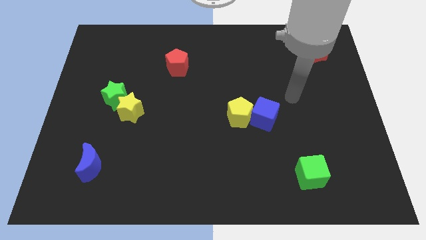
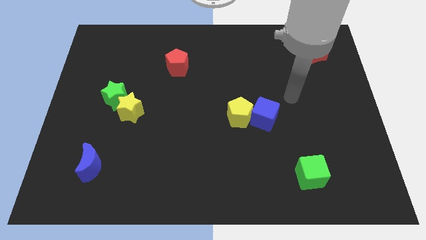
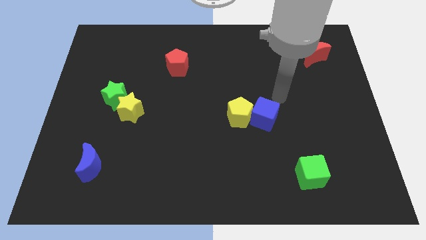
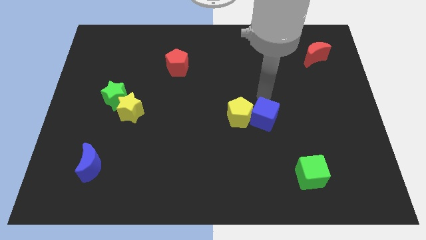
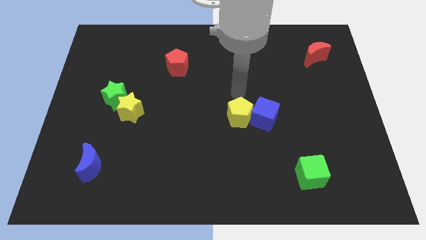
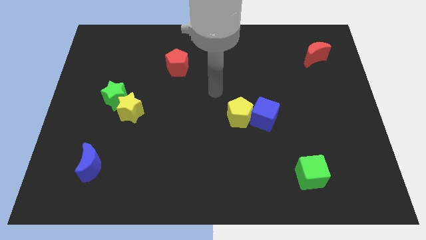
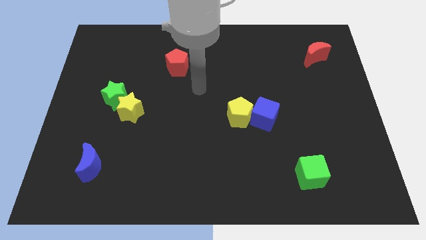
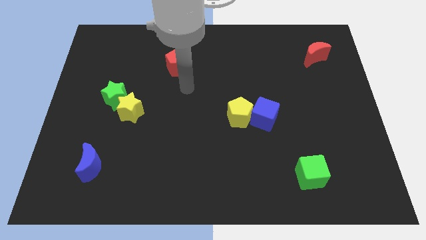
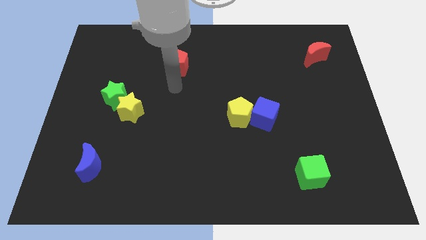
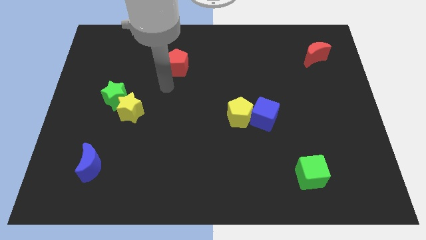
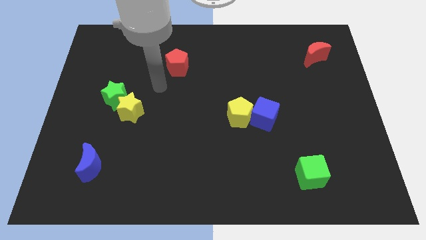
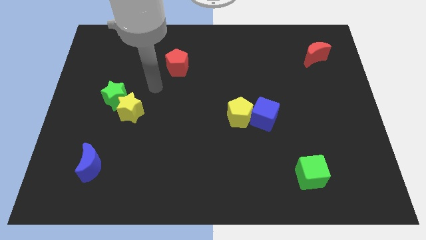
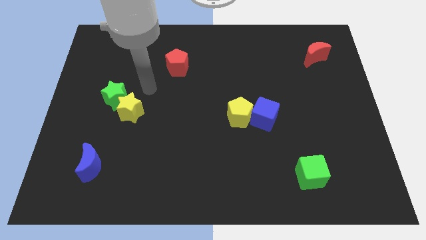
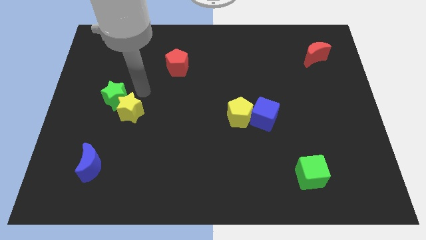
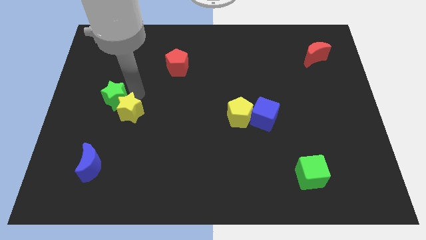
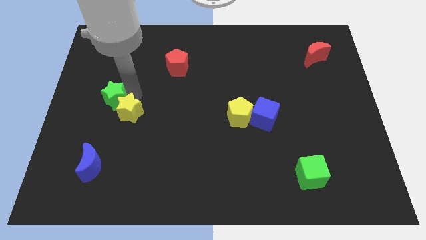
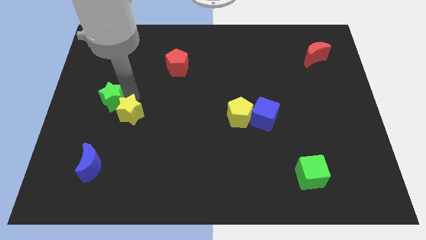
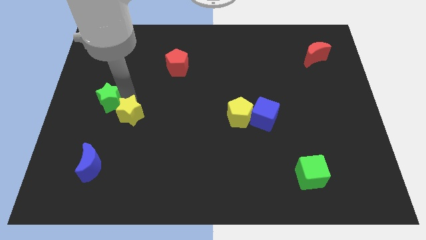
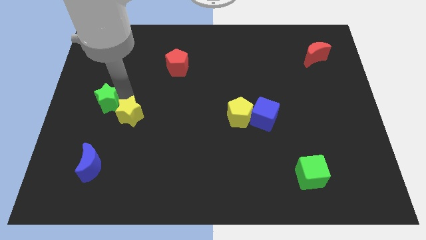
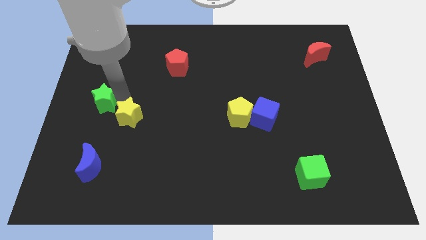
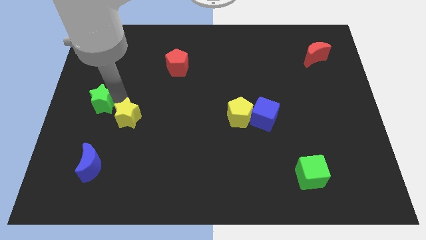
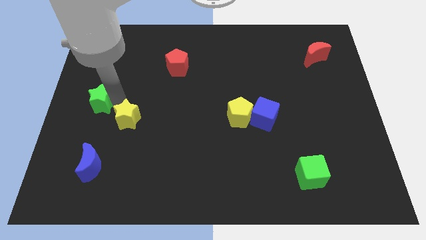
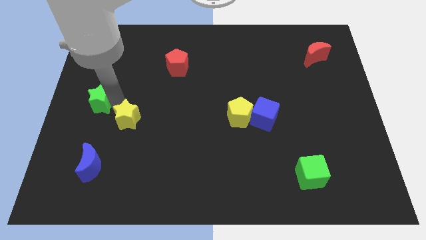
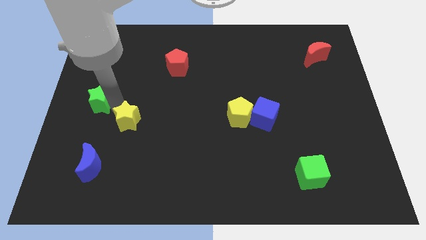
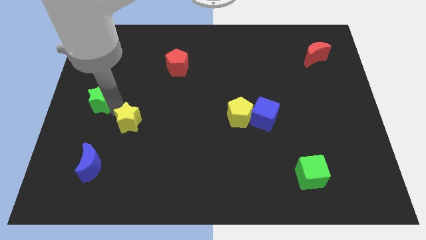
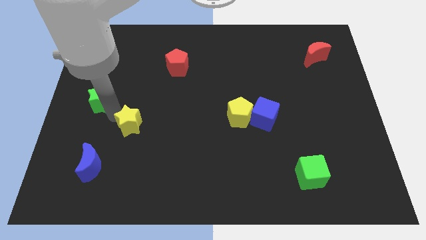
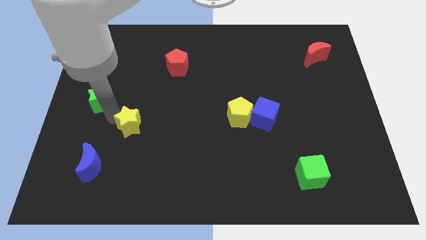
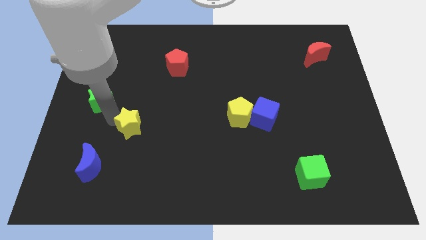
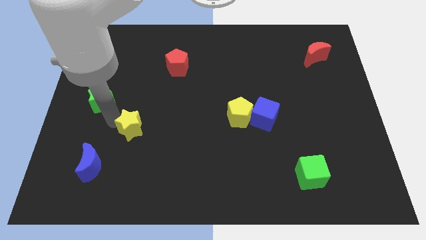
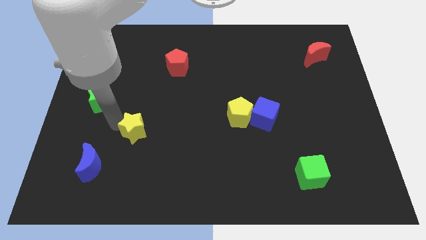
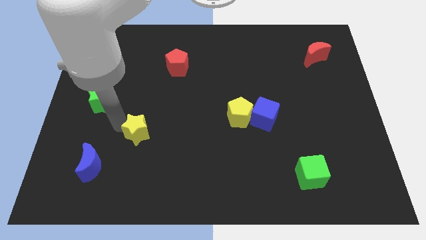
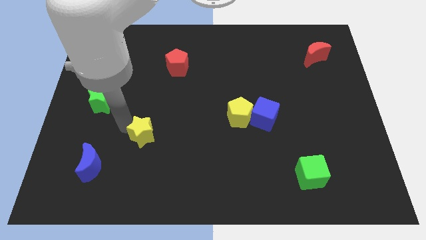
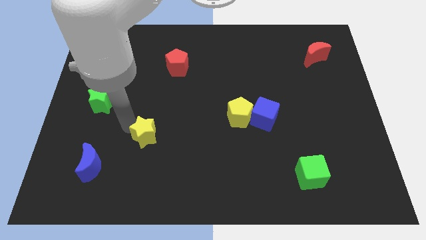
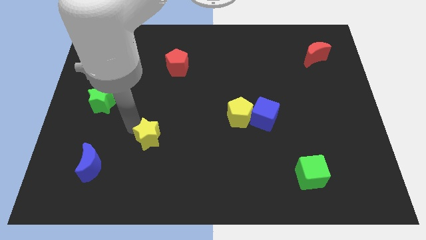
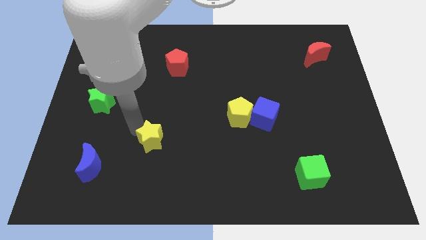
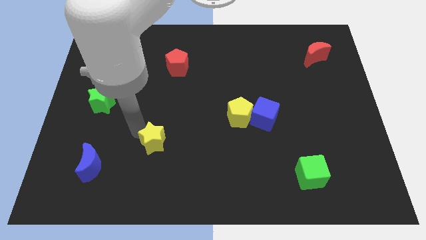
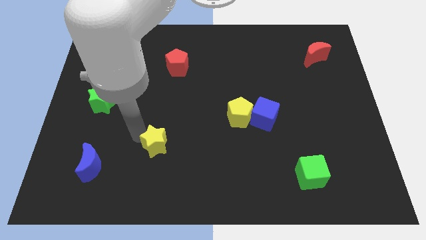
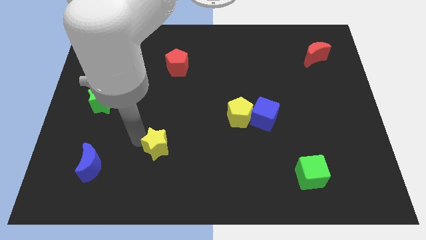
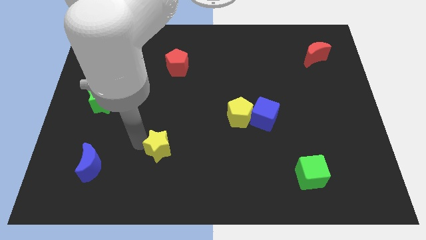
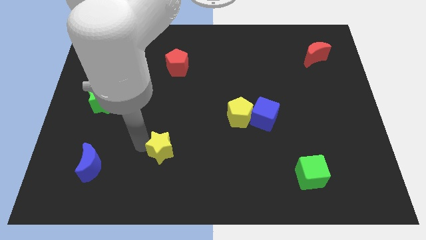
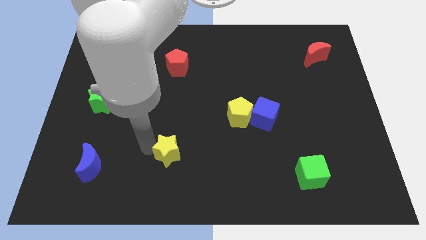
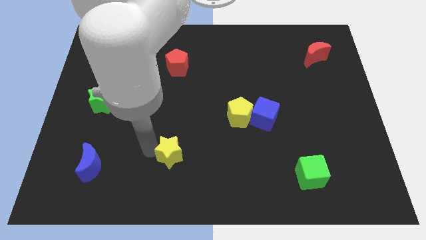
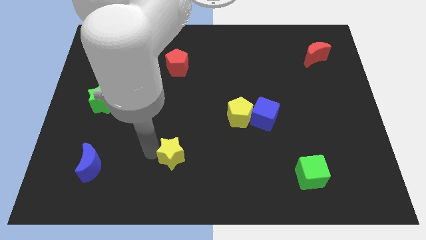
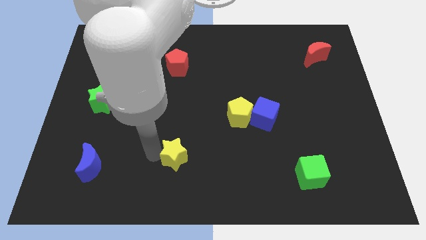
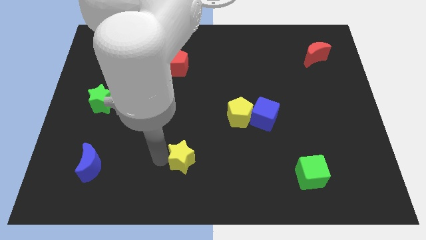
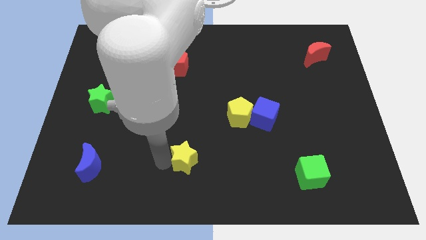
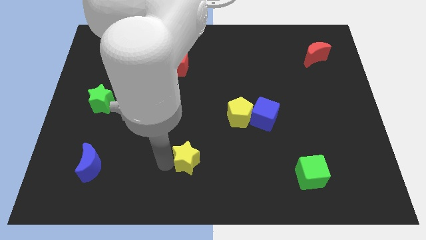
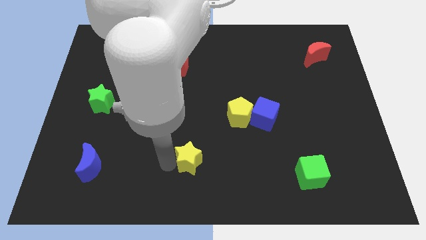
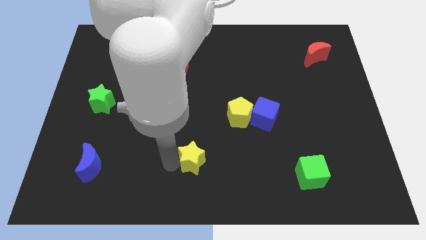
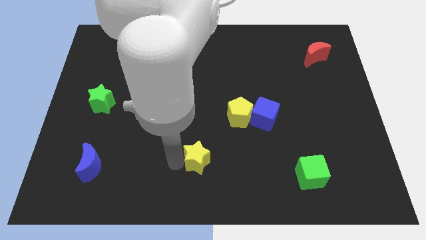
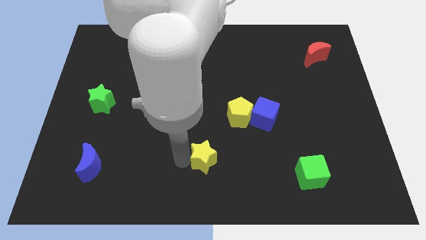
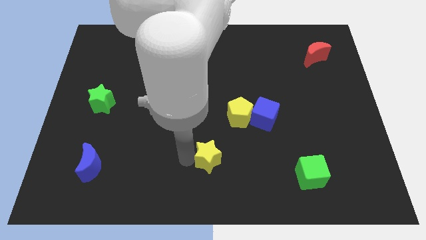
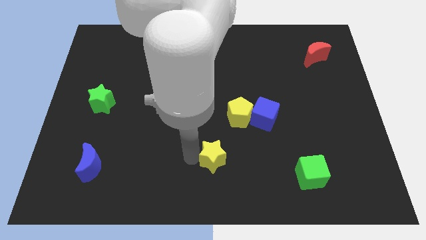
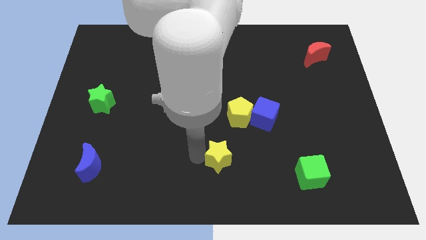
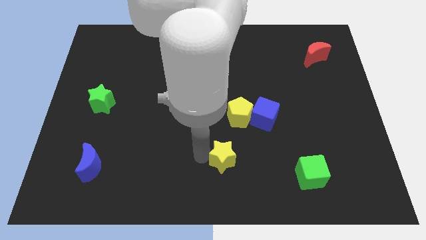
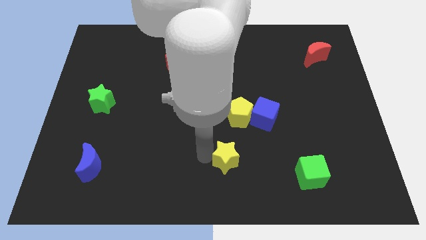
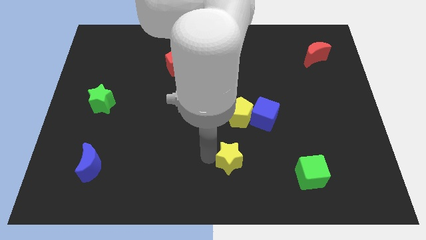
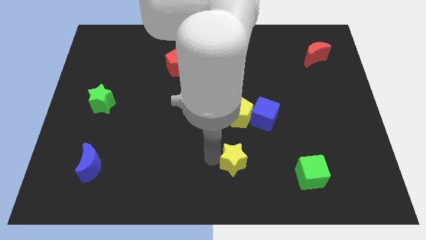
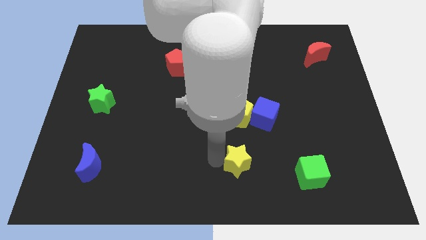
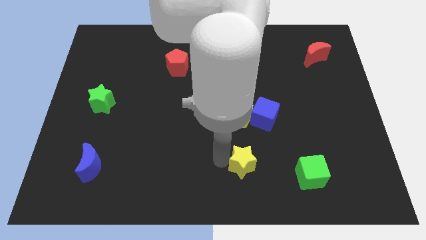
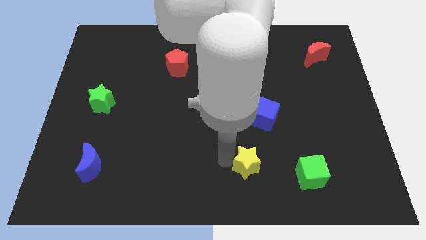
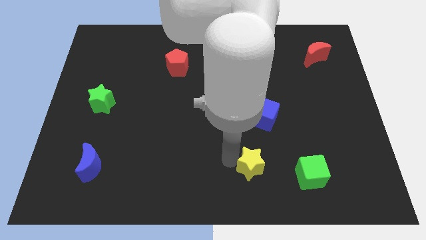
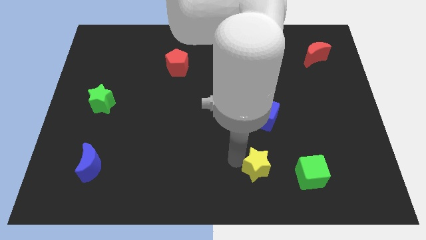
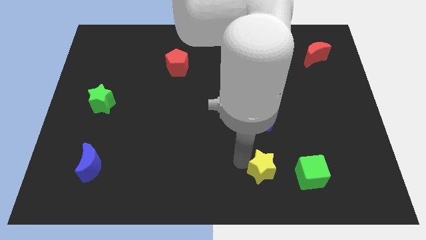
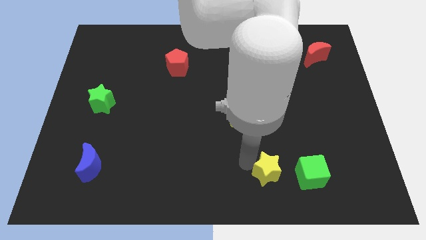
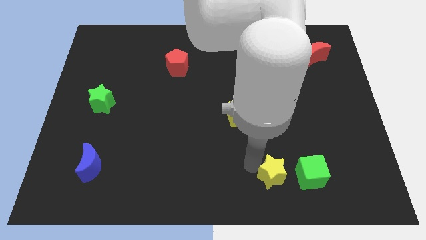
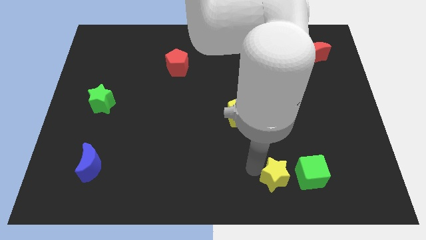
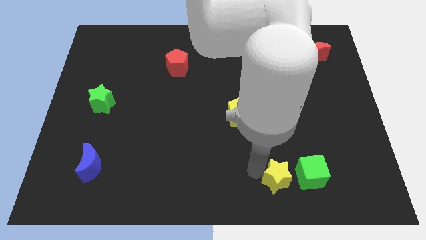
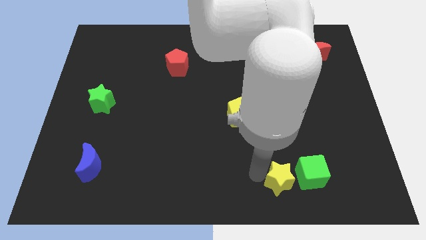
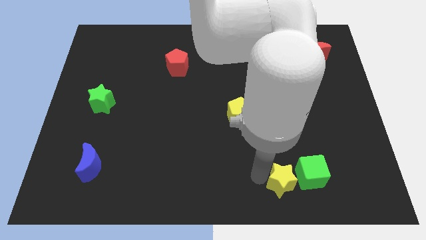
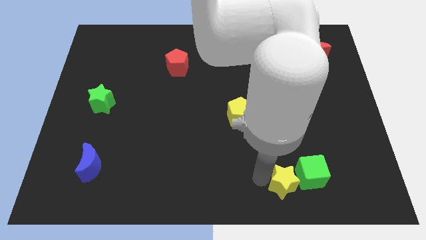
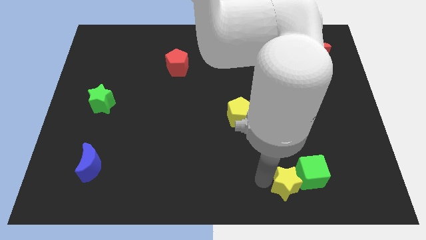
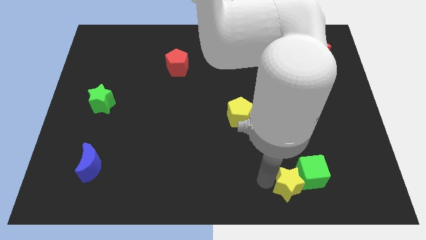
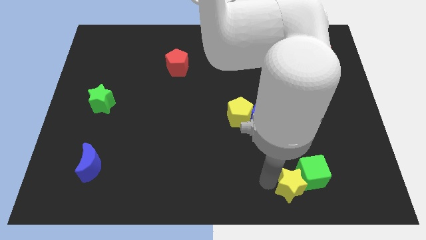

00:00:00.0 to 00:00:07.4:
push the yellow star towards the green cube

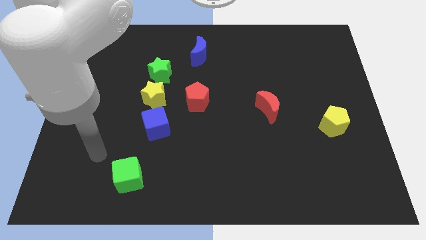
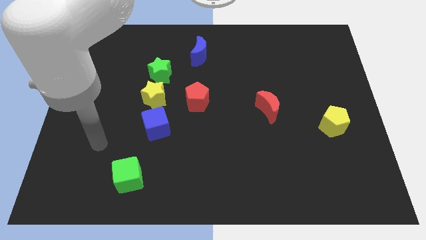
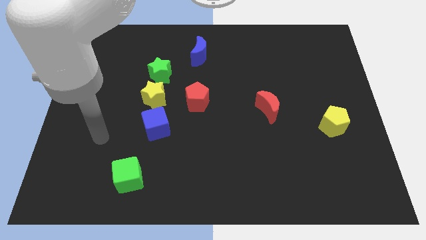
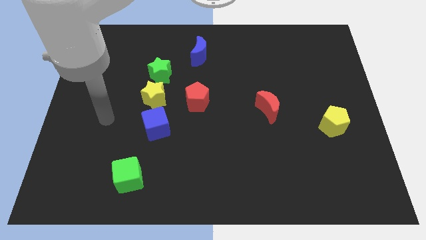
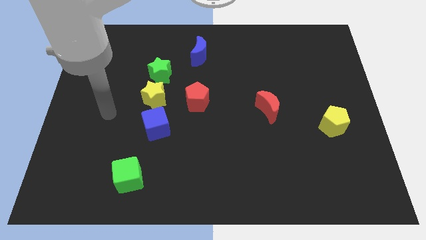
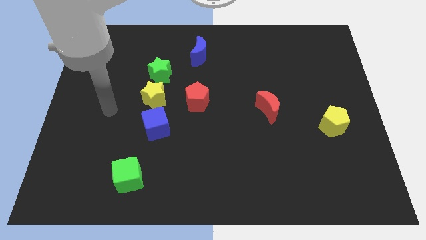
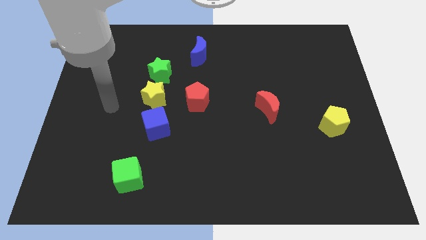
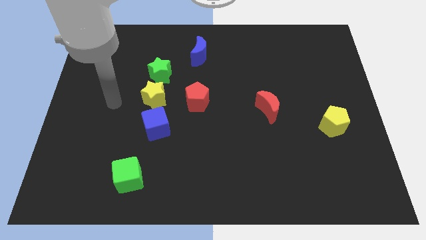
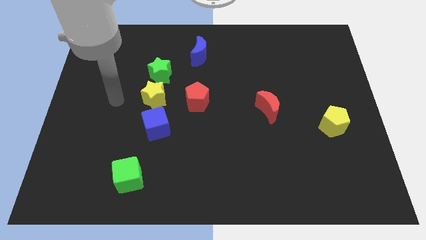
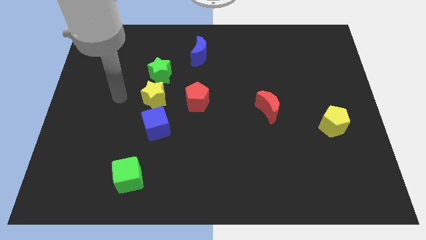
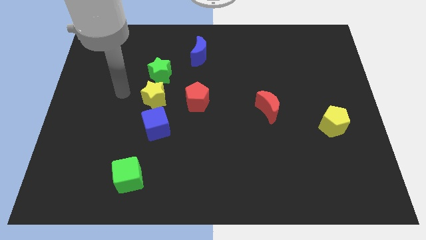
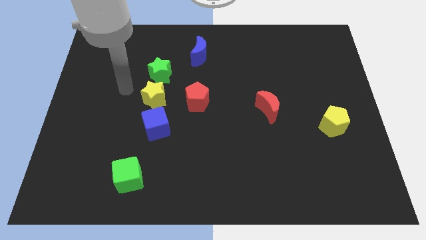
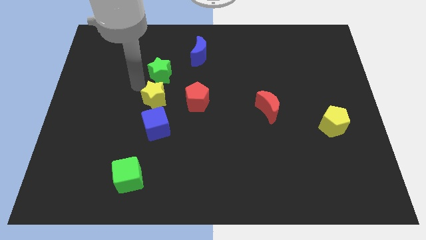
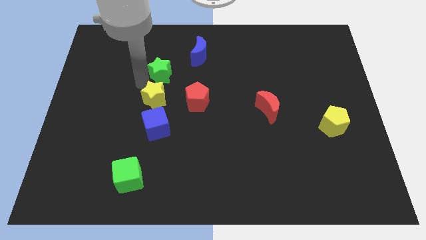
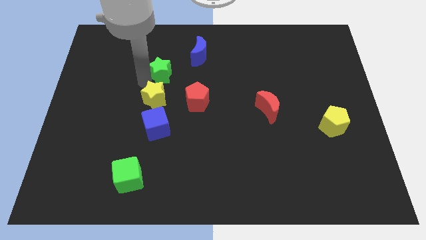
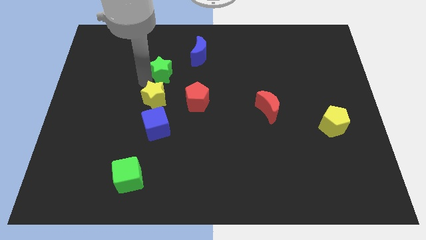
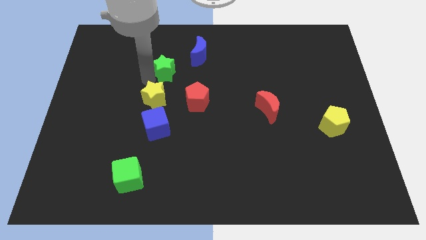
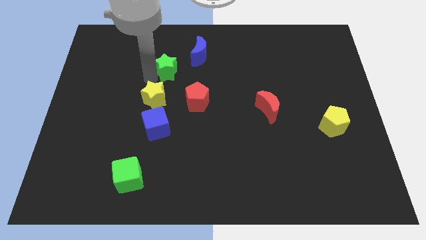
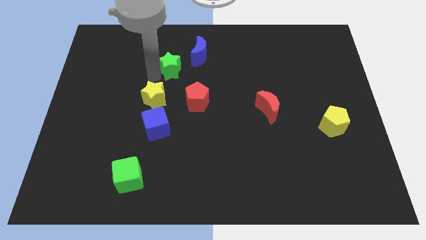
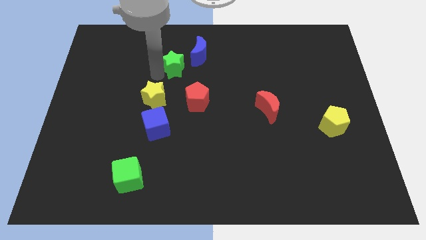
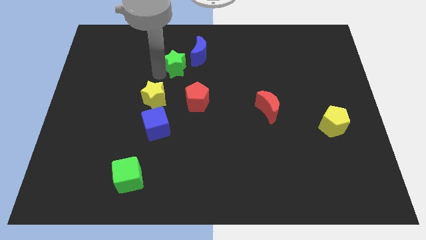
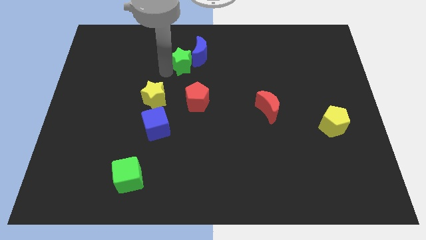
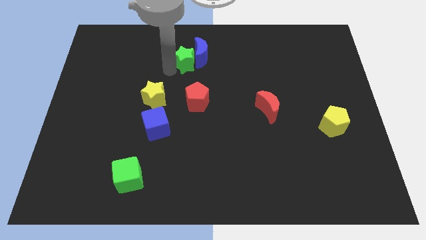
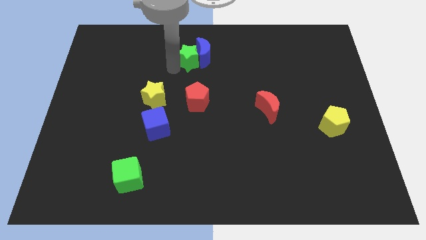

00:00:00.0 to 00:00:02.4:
slide the green star next to the blue moon
